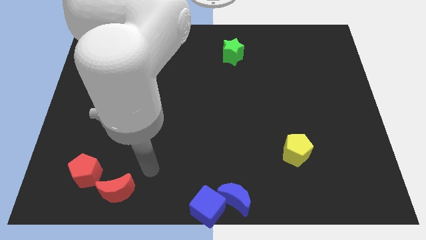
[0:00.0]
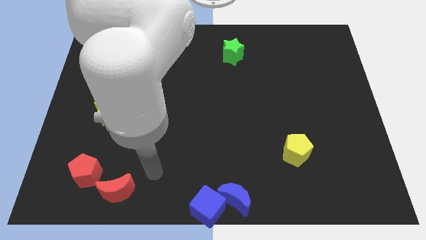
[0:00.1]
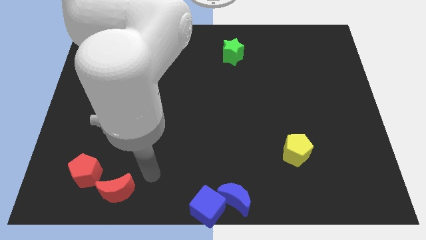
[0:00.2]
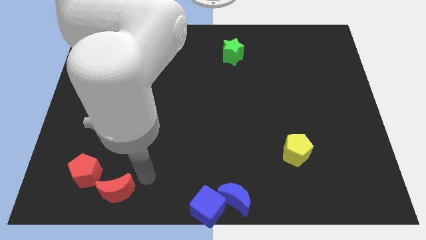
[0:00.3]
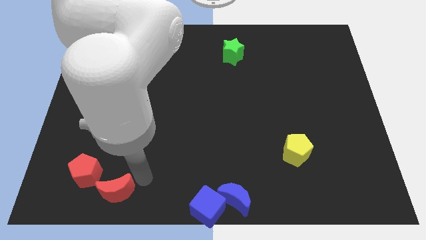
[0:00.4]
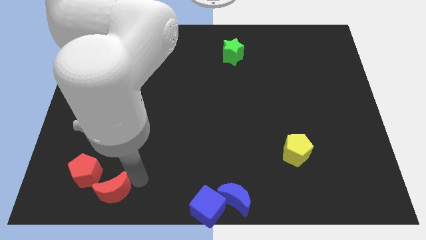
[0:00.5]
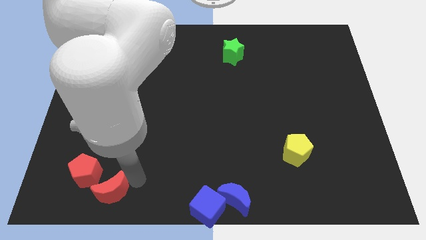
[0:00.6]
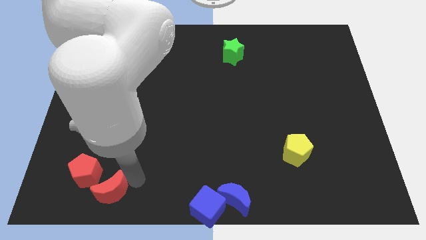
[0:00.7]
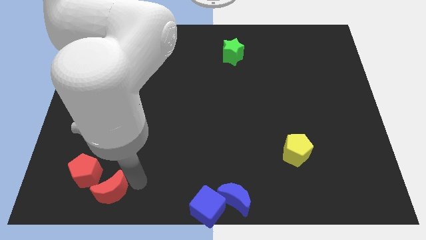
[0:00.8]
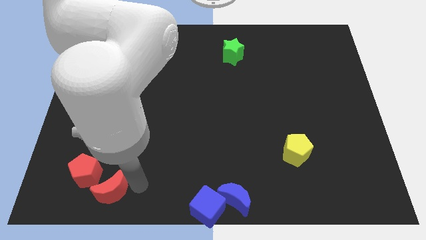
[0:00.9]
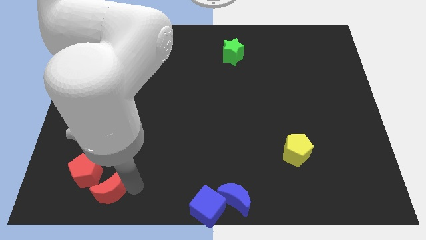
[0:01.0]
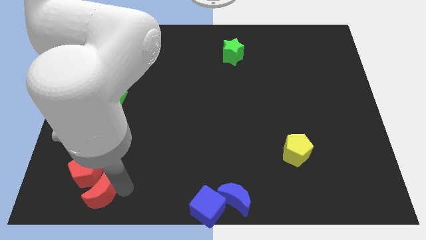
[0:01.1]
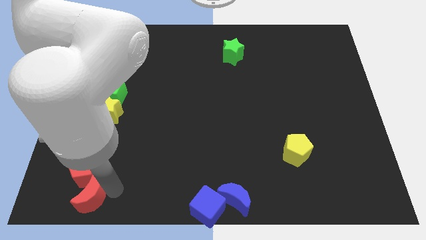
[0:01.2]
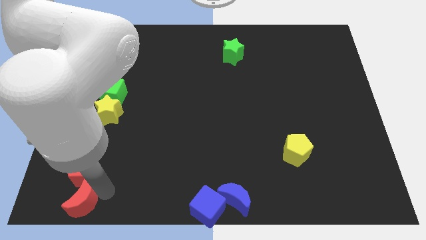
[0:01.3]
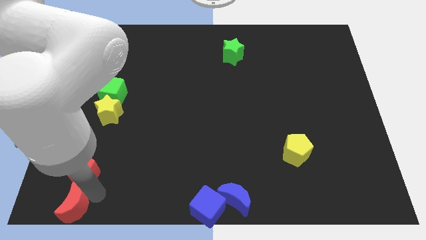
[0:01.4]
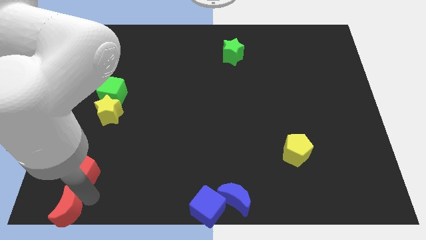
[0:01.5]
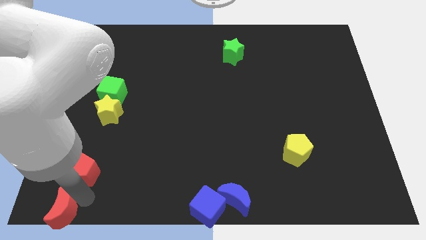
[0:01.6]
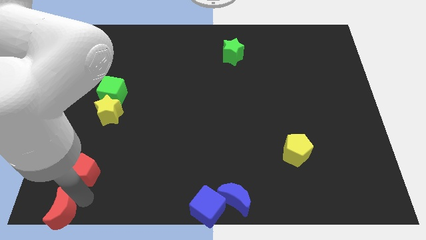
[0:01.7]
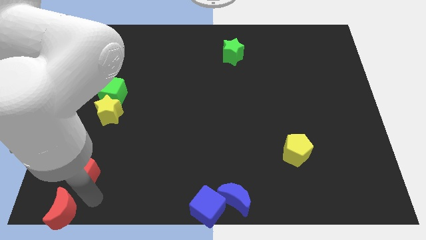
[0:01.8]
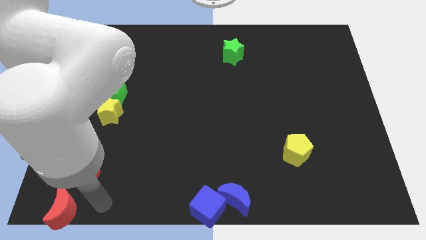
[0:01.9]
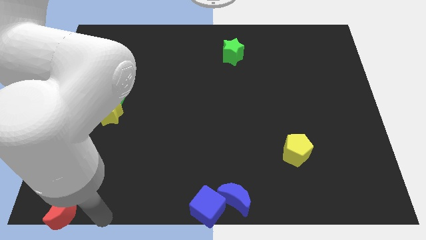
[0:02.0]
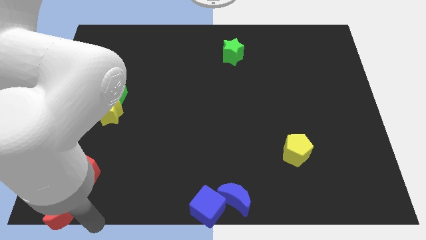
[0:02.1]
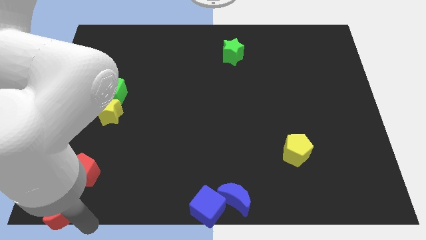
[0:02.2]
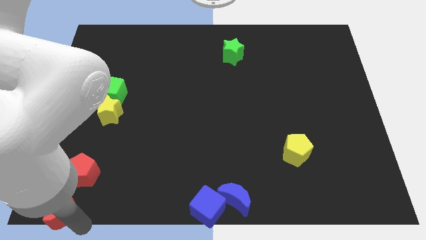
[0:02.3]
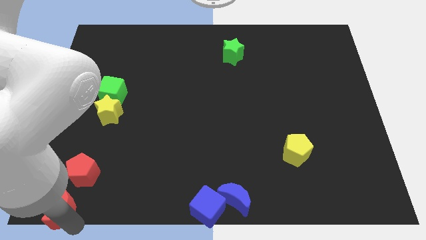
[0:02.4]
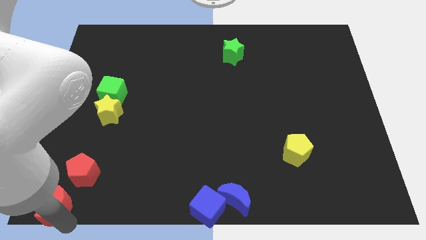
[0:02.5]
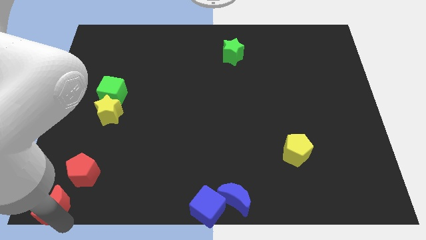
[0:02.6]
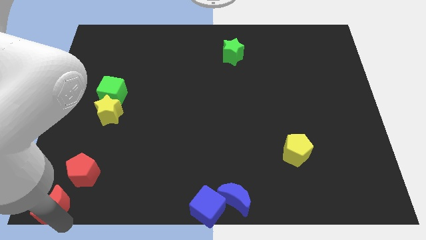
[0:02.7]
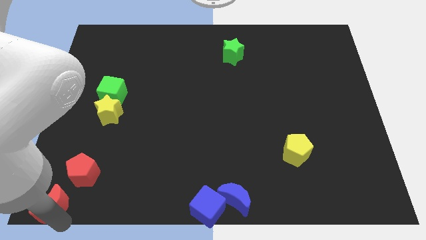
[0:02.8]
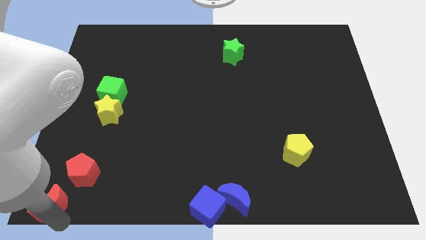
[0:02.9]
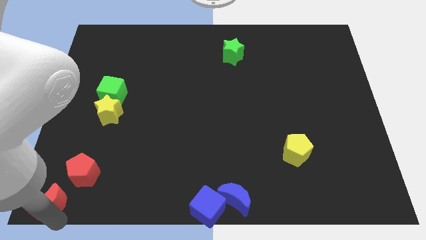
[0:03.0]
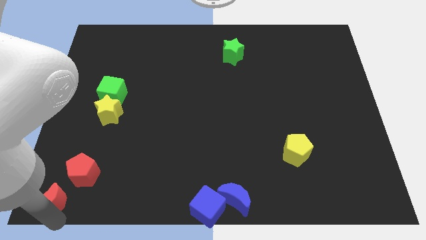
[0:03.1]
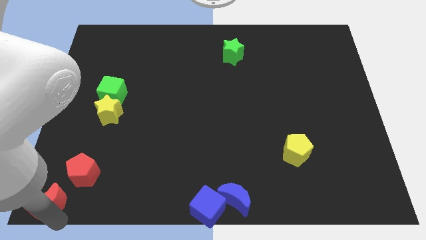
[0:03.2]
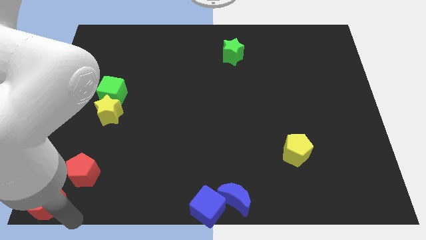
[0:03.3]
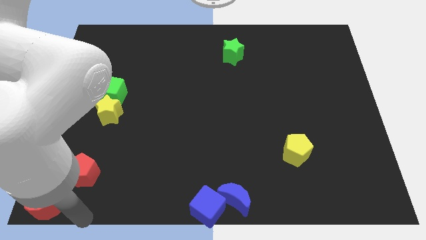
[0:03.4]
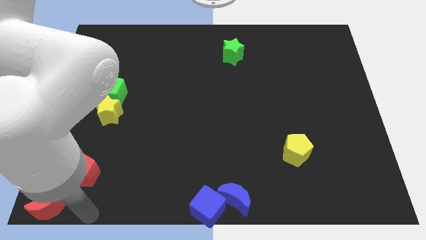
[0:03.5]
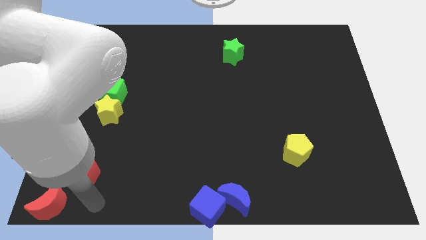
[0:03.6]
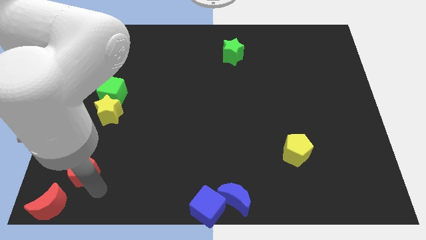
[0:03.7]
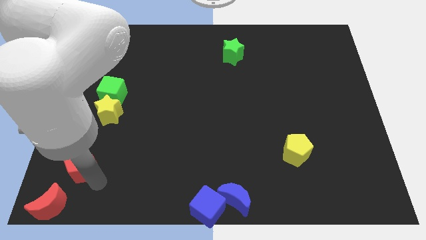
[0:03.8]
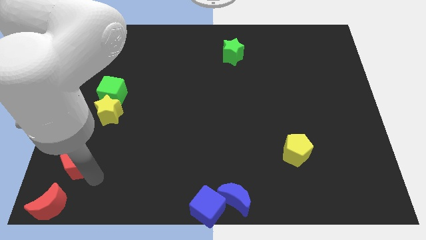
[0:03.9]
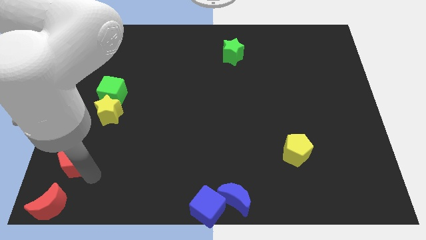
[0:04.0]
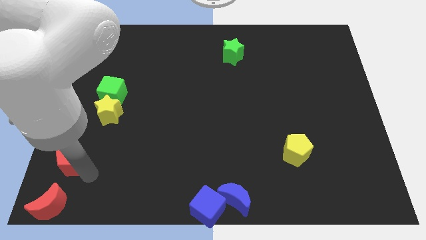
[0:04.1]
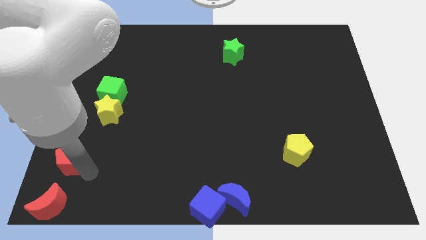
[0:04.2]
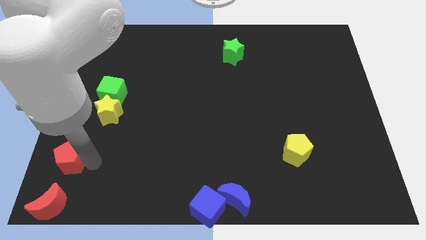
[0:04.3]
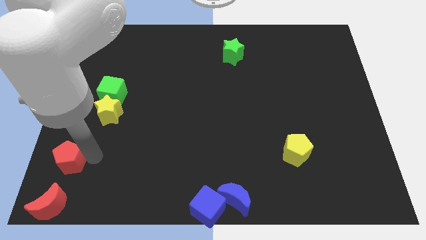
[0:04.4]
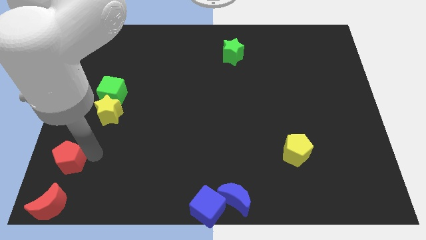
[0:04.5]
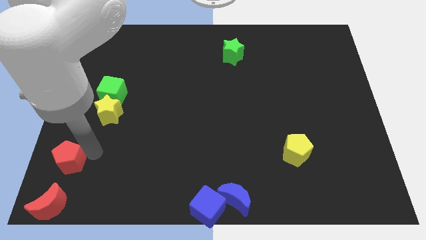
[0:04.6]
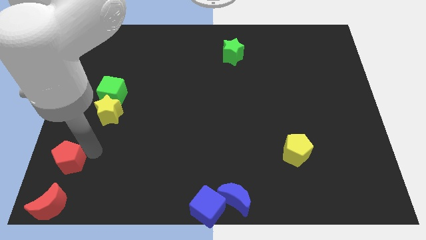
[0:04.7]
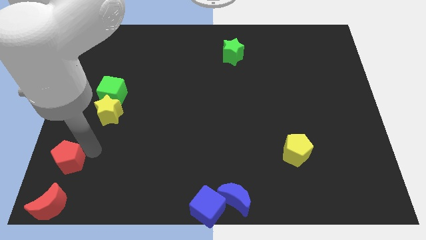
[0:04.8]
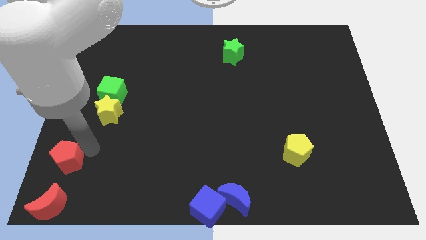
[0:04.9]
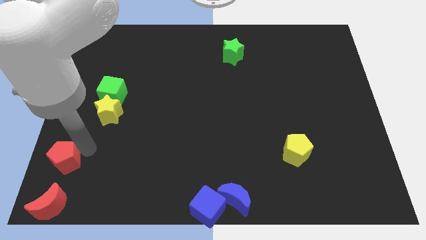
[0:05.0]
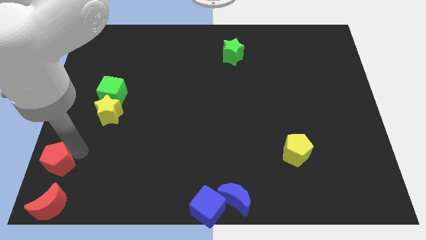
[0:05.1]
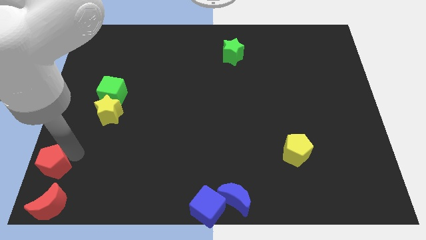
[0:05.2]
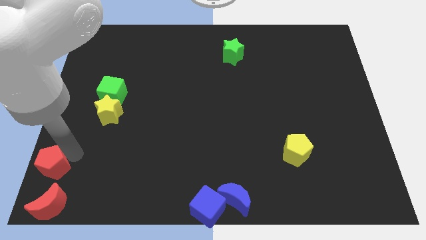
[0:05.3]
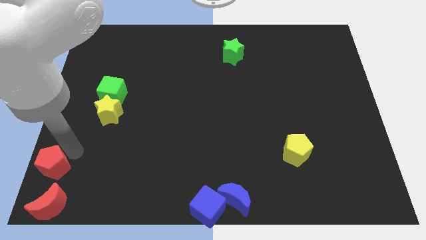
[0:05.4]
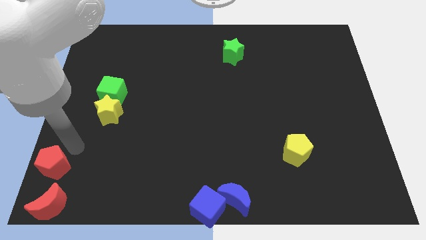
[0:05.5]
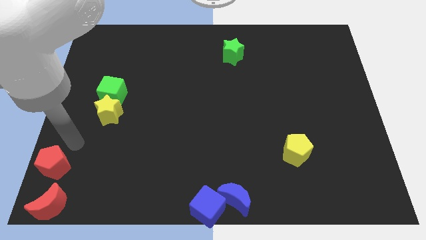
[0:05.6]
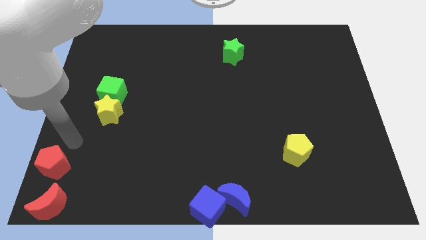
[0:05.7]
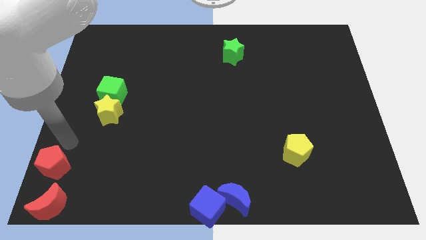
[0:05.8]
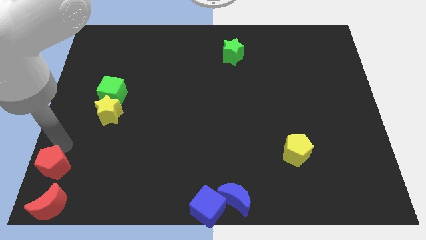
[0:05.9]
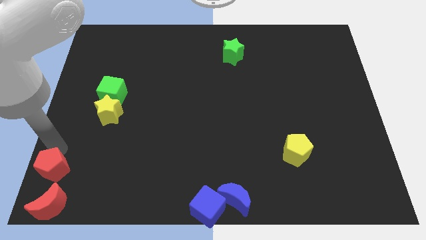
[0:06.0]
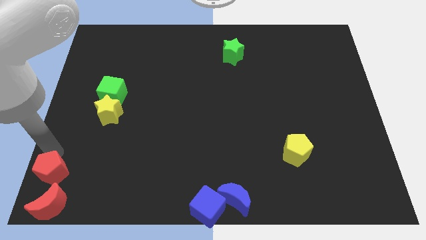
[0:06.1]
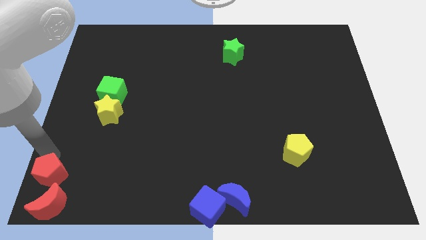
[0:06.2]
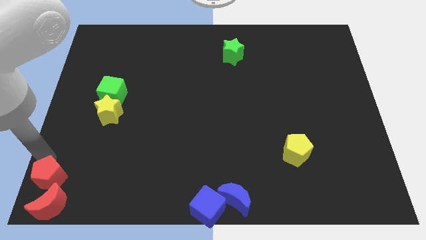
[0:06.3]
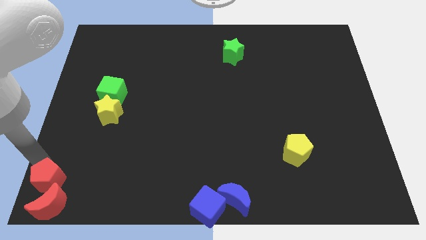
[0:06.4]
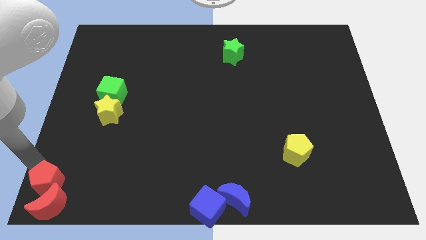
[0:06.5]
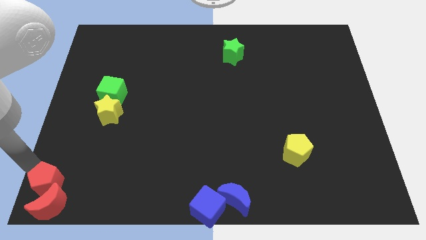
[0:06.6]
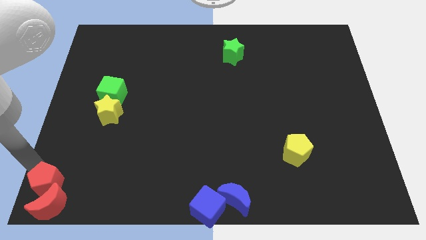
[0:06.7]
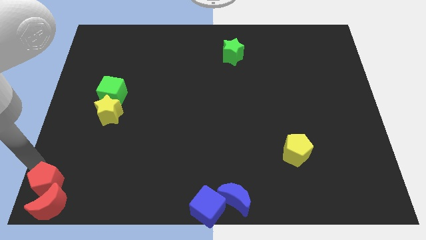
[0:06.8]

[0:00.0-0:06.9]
place the red blocks at the bottom left corner of the board

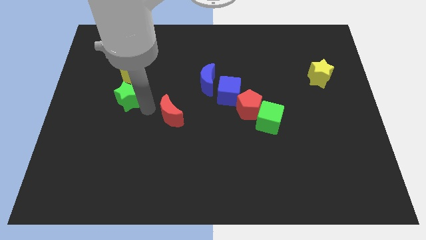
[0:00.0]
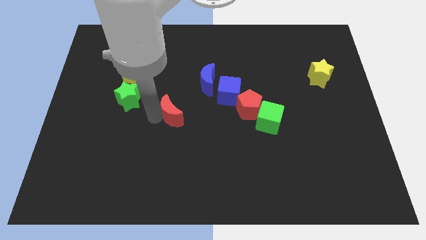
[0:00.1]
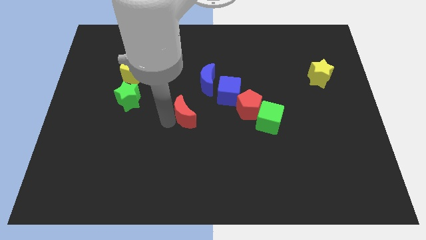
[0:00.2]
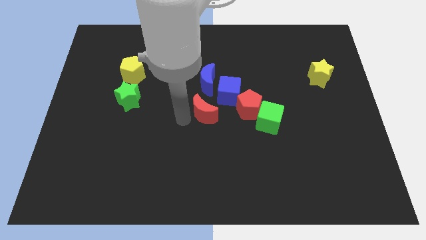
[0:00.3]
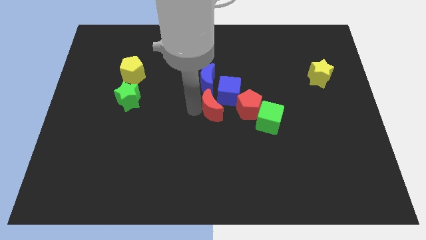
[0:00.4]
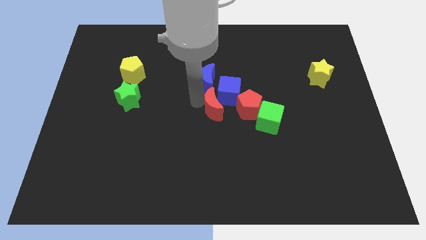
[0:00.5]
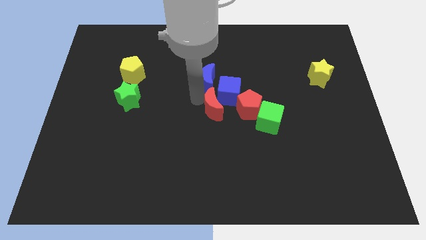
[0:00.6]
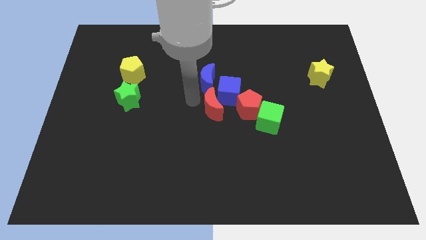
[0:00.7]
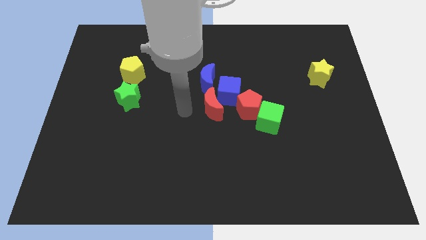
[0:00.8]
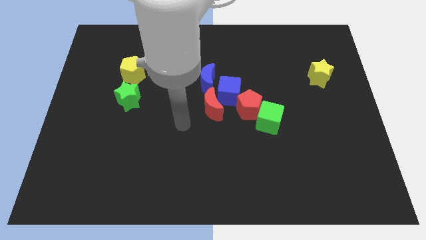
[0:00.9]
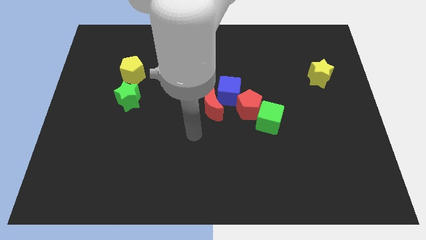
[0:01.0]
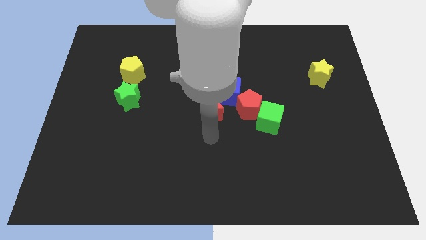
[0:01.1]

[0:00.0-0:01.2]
push the red crescent towards the blue cube

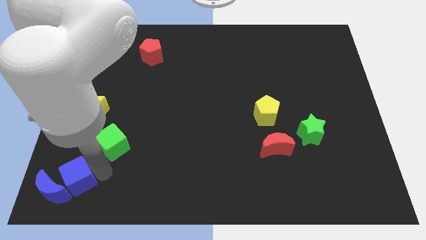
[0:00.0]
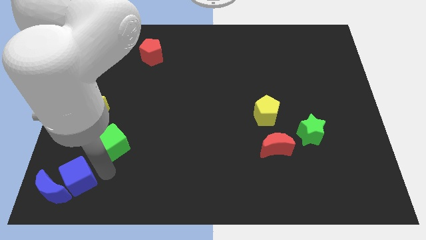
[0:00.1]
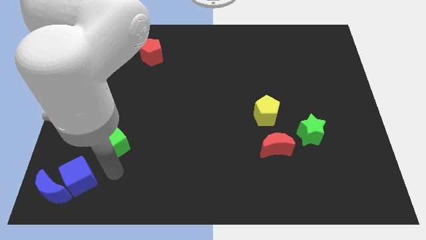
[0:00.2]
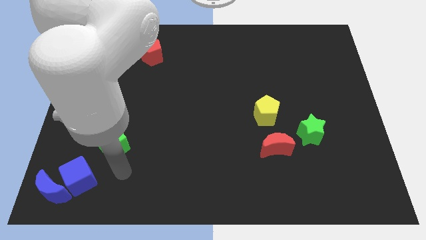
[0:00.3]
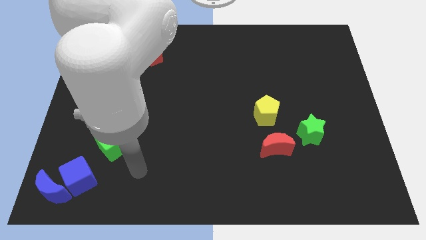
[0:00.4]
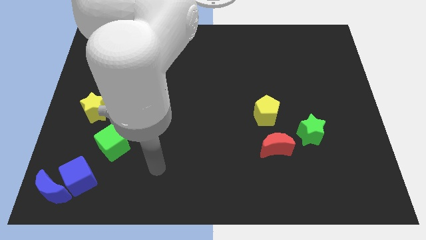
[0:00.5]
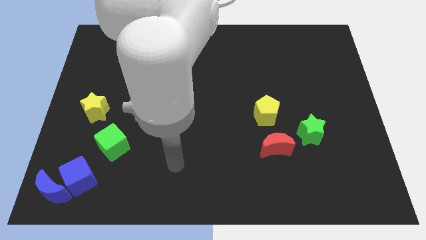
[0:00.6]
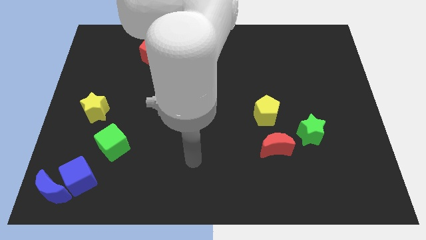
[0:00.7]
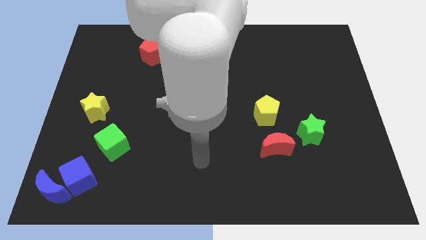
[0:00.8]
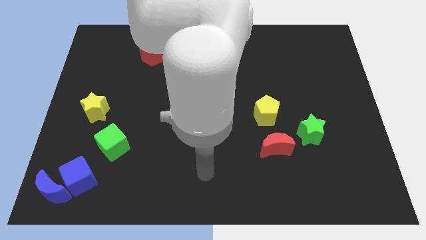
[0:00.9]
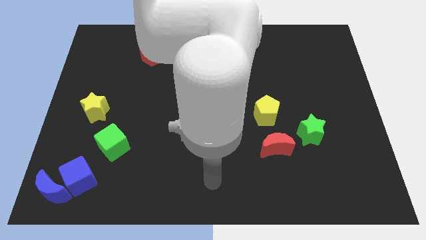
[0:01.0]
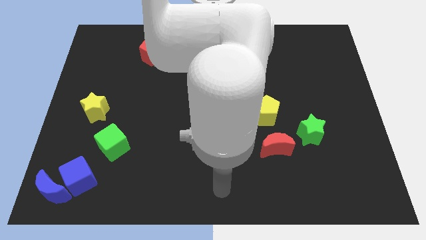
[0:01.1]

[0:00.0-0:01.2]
move your arm away from blue cube
